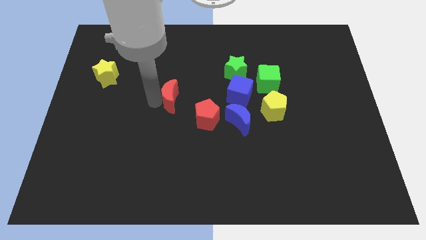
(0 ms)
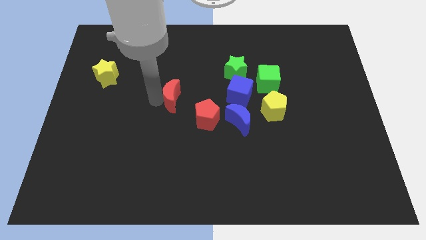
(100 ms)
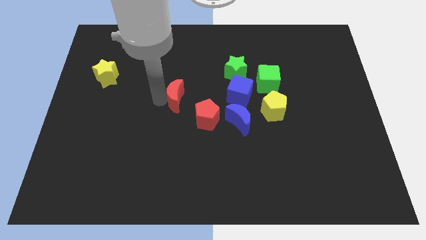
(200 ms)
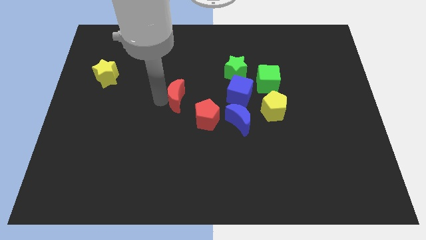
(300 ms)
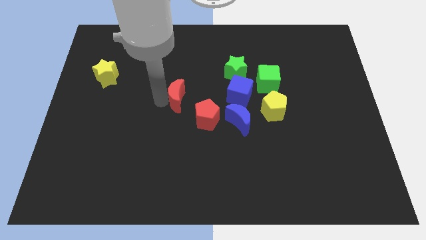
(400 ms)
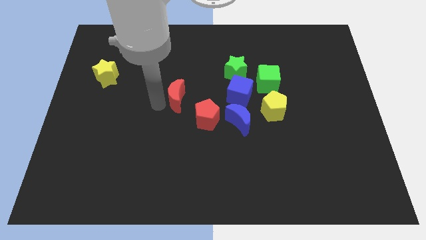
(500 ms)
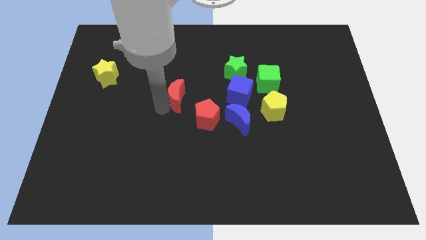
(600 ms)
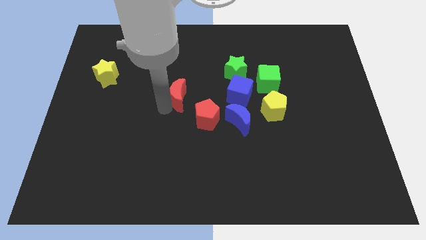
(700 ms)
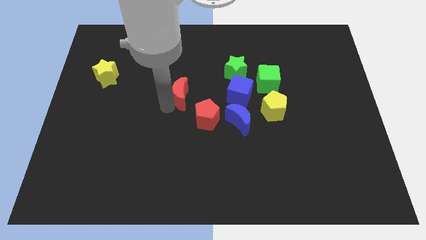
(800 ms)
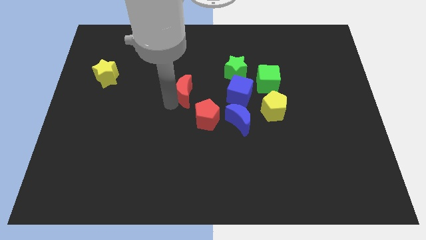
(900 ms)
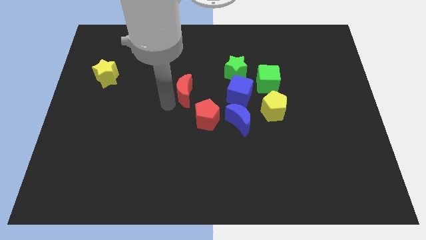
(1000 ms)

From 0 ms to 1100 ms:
slide red moon towards blue cube

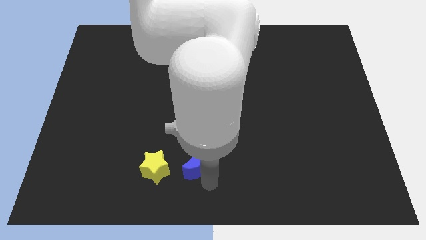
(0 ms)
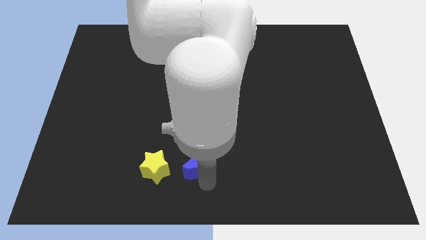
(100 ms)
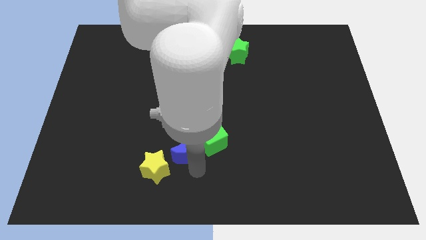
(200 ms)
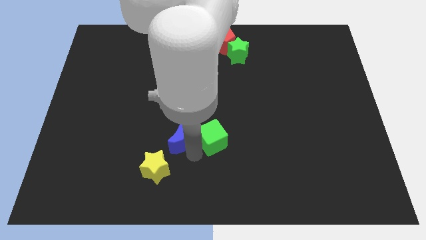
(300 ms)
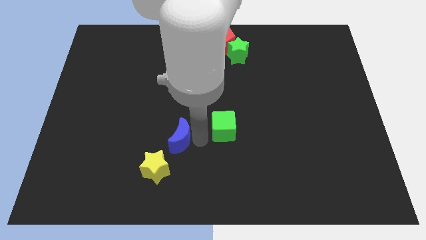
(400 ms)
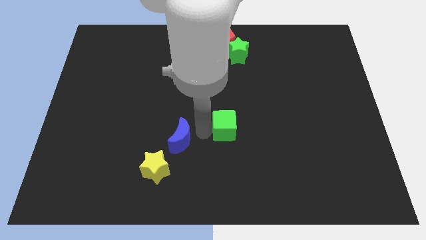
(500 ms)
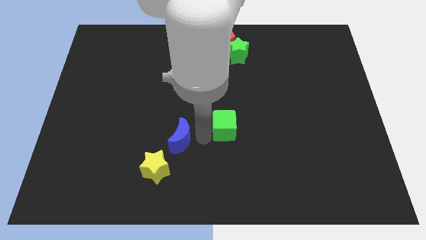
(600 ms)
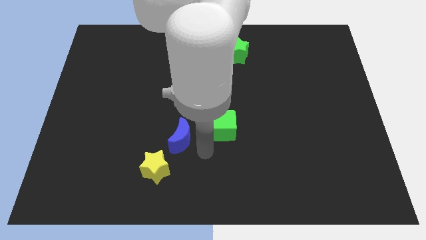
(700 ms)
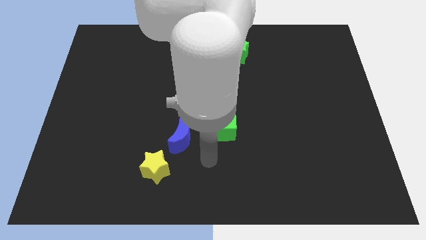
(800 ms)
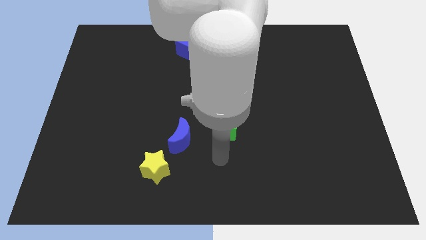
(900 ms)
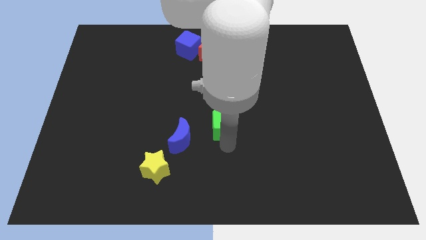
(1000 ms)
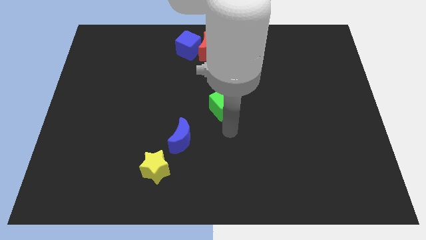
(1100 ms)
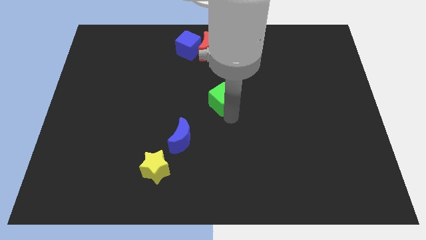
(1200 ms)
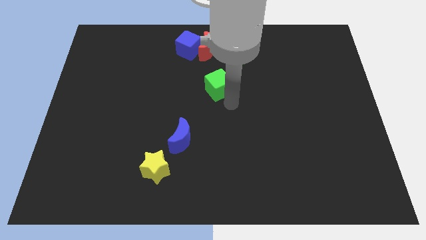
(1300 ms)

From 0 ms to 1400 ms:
separate the blue crescent and green cube from each other

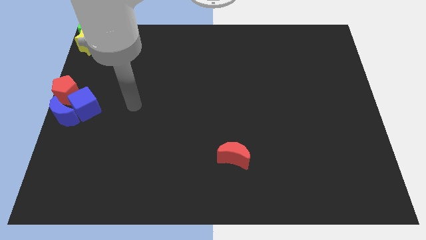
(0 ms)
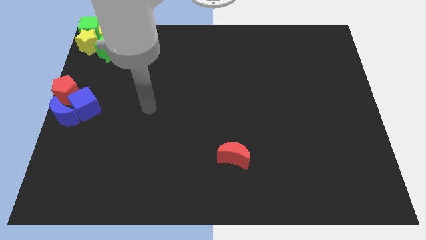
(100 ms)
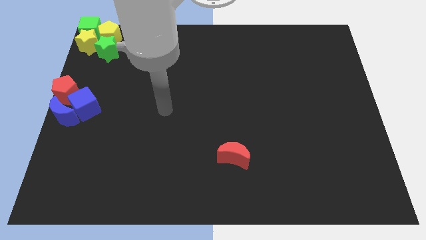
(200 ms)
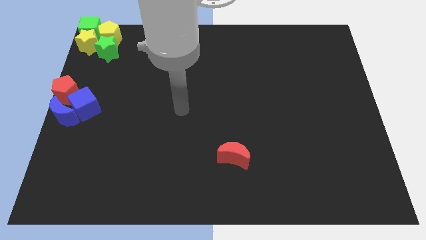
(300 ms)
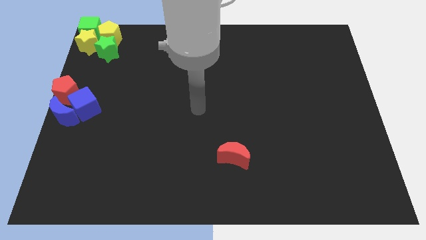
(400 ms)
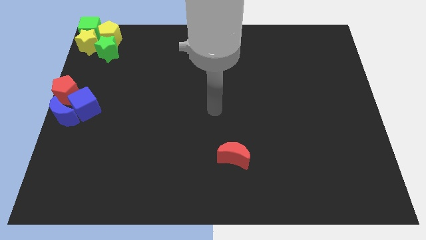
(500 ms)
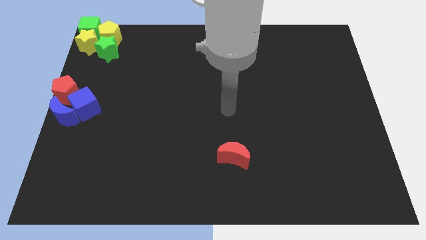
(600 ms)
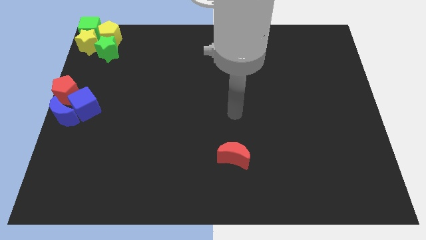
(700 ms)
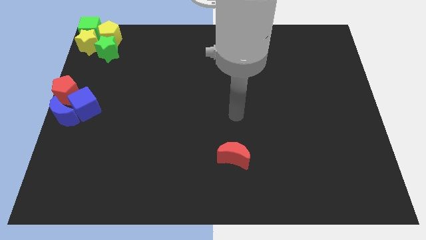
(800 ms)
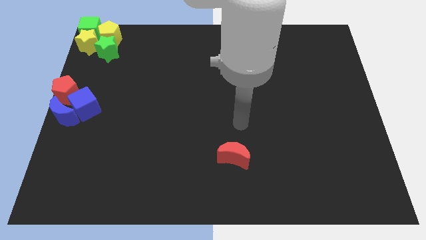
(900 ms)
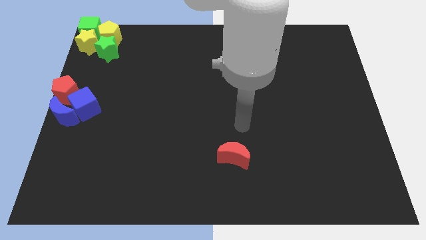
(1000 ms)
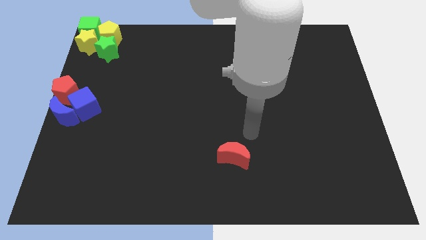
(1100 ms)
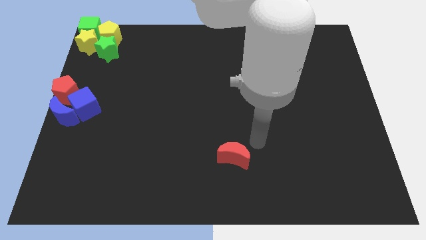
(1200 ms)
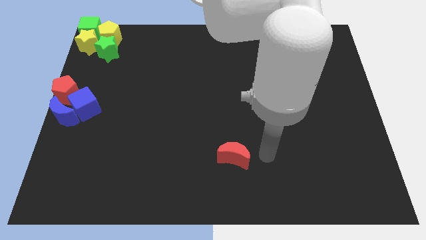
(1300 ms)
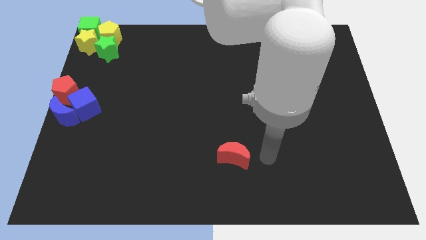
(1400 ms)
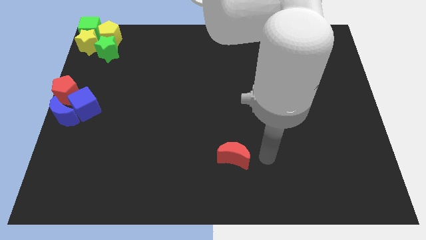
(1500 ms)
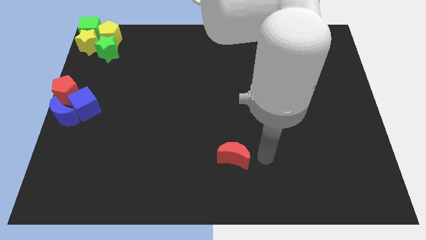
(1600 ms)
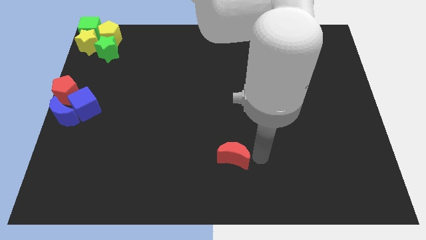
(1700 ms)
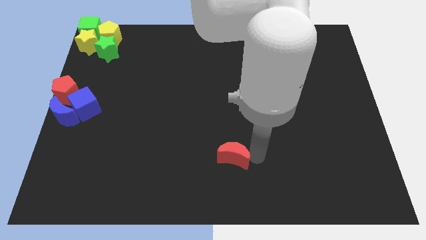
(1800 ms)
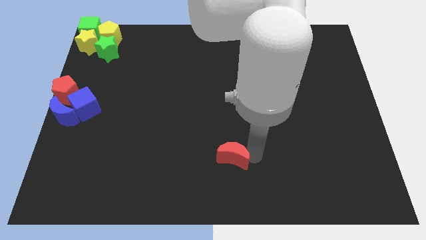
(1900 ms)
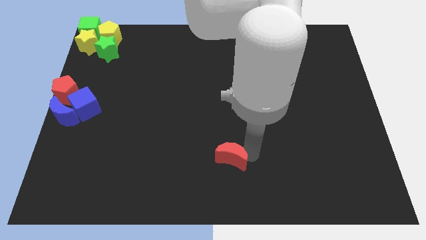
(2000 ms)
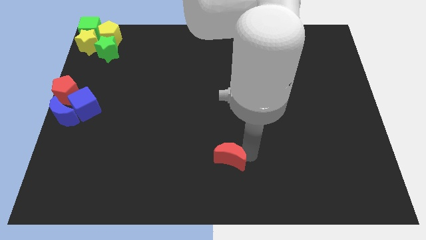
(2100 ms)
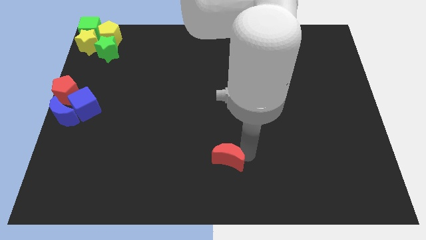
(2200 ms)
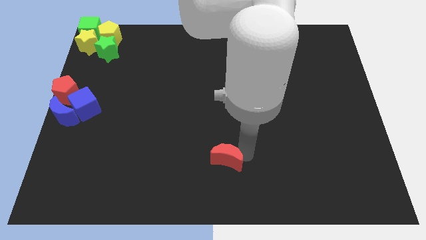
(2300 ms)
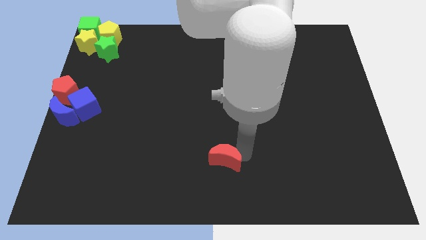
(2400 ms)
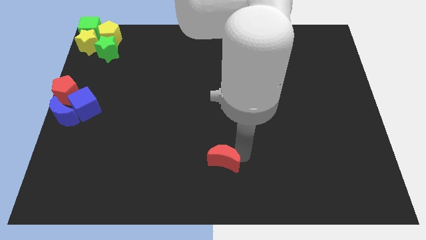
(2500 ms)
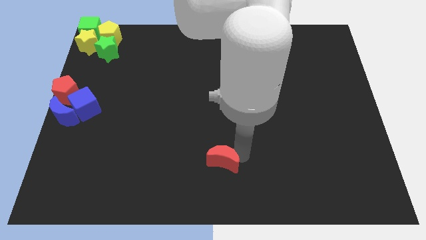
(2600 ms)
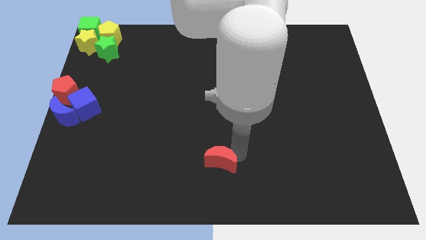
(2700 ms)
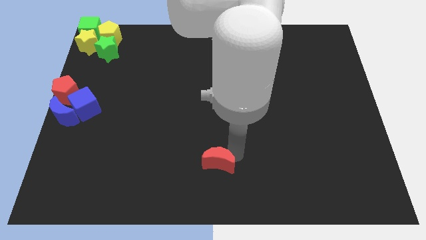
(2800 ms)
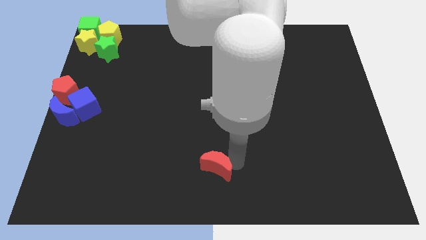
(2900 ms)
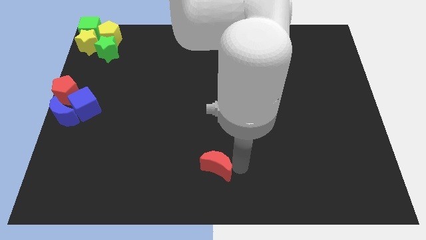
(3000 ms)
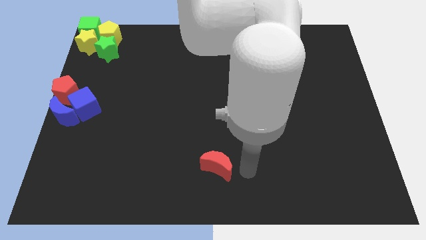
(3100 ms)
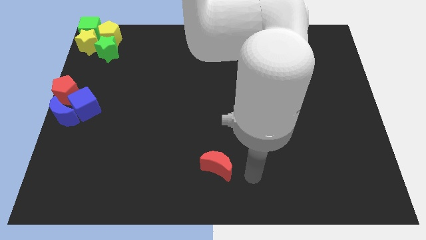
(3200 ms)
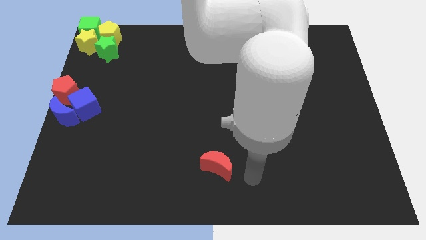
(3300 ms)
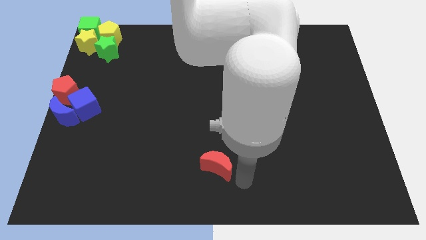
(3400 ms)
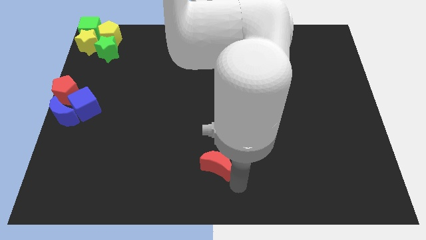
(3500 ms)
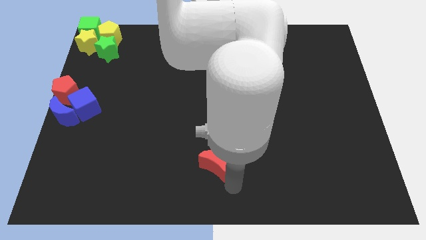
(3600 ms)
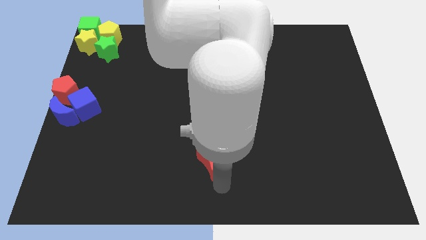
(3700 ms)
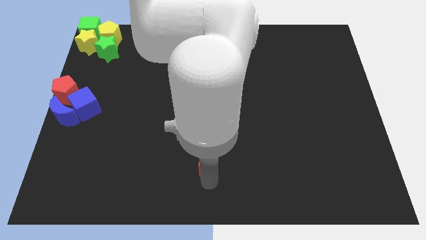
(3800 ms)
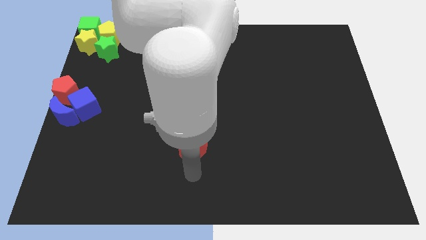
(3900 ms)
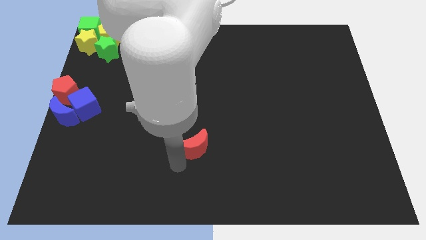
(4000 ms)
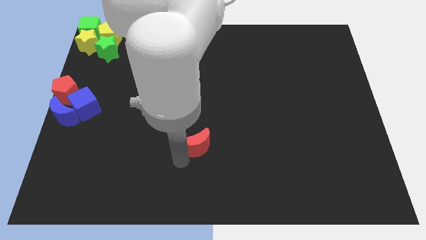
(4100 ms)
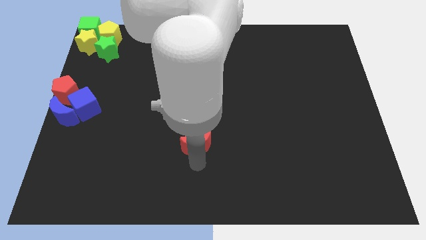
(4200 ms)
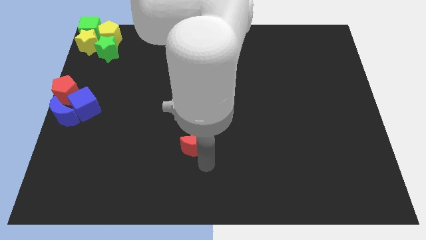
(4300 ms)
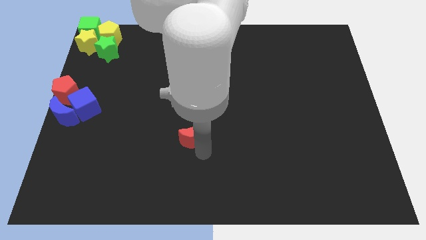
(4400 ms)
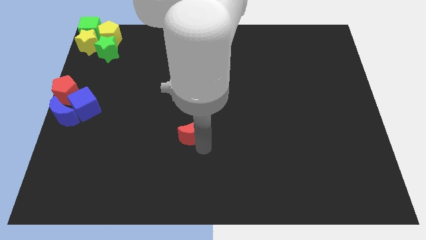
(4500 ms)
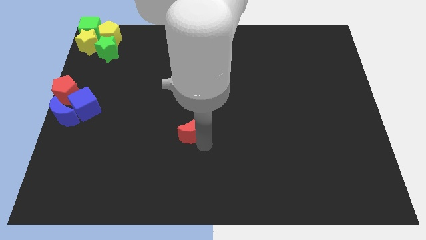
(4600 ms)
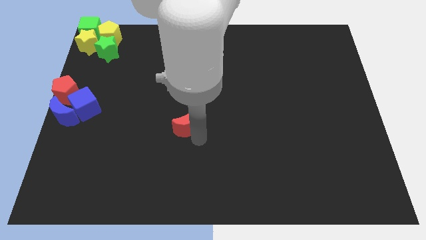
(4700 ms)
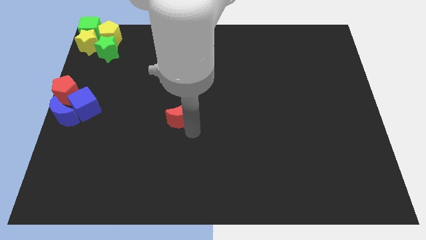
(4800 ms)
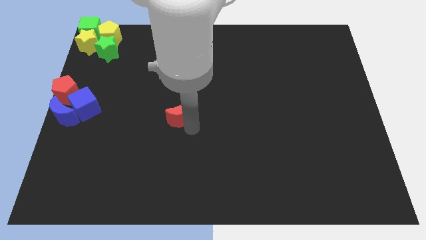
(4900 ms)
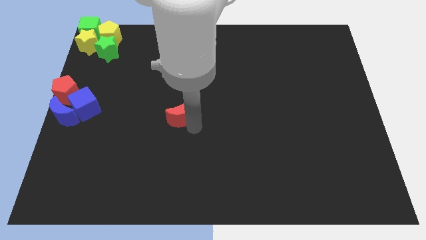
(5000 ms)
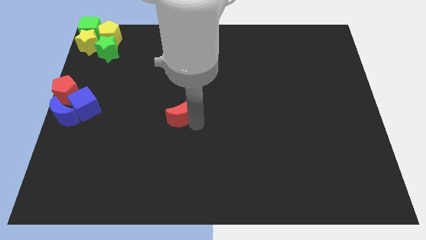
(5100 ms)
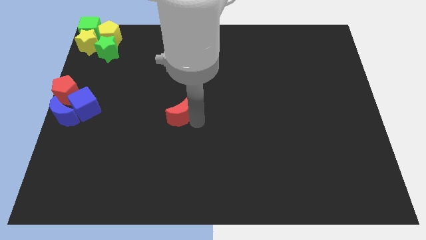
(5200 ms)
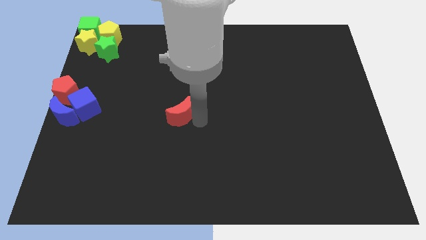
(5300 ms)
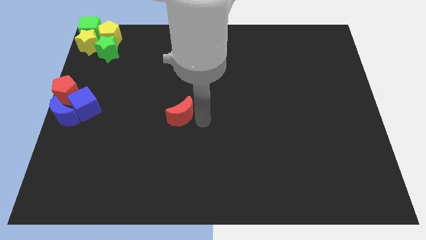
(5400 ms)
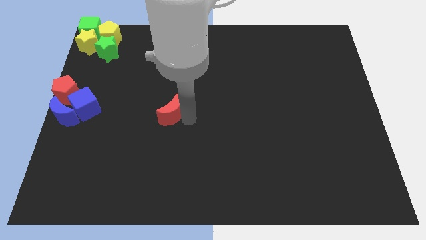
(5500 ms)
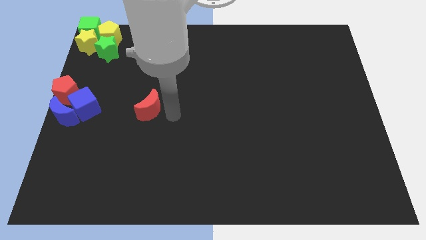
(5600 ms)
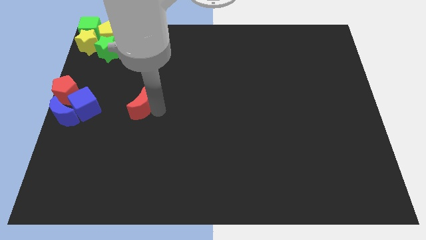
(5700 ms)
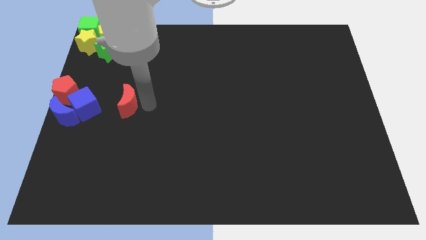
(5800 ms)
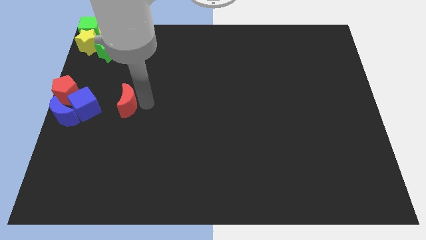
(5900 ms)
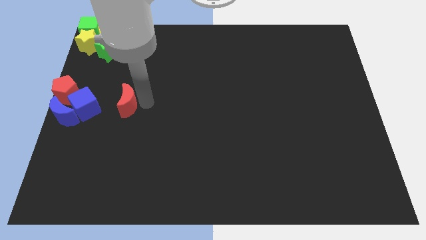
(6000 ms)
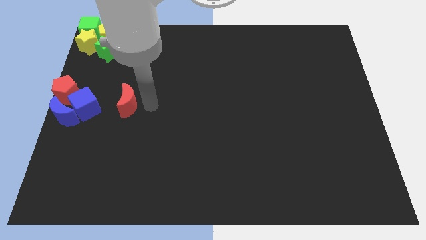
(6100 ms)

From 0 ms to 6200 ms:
put the red moon parallel right to the blue cube

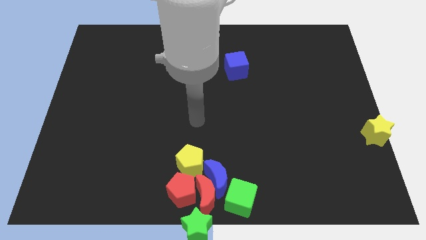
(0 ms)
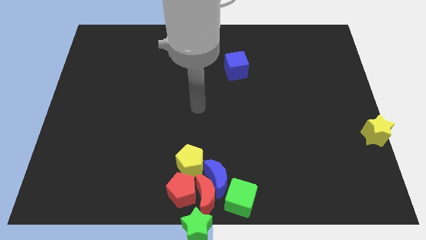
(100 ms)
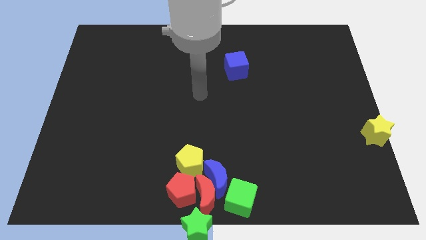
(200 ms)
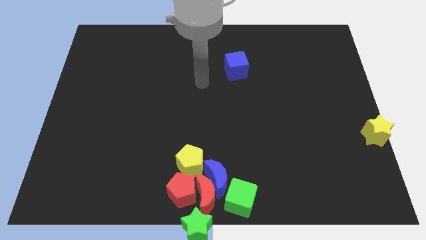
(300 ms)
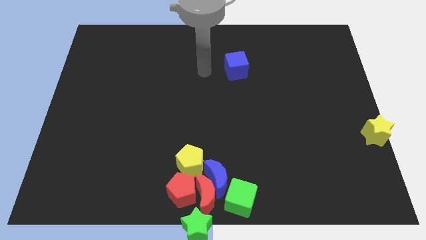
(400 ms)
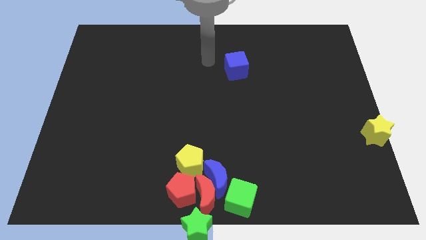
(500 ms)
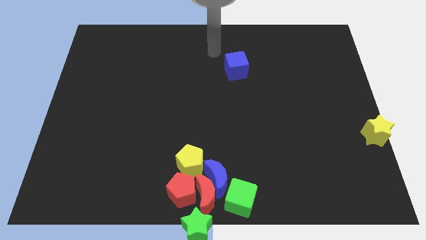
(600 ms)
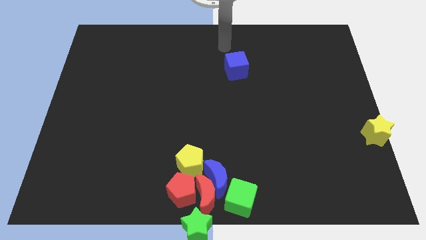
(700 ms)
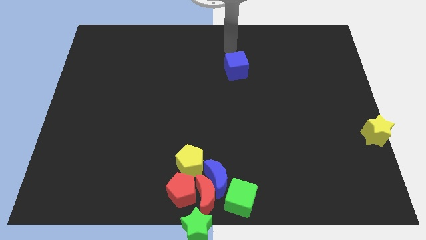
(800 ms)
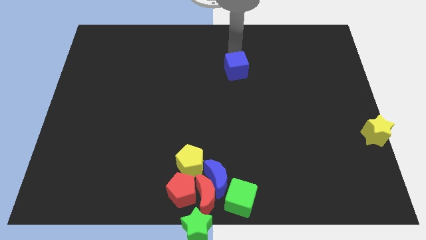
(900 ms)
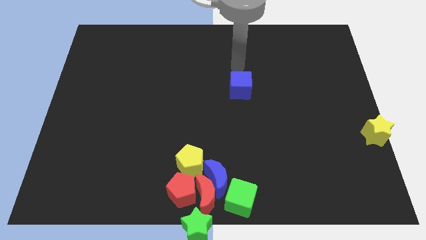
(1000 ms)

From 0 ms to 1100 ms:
move your arm towards the top of the blue cube
